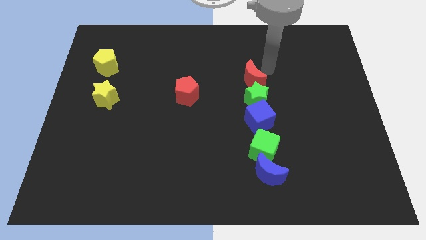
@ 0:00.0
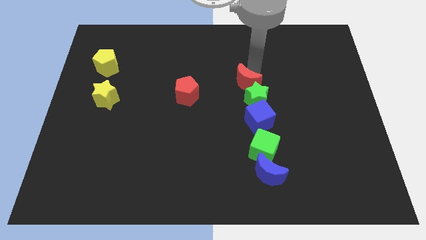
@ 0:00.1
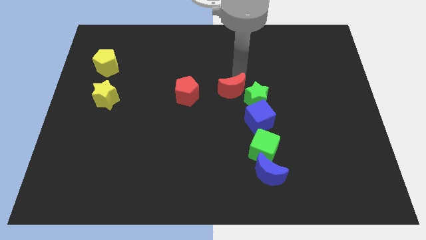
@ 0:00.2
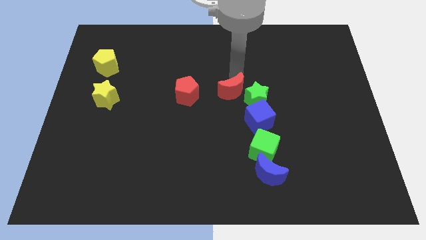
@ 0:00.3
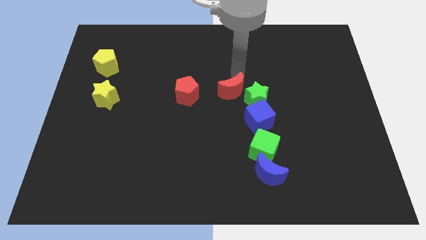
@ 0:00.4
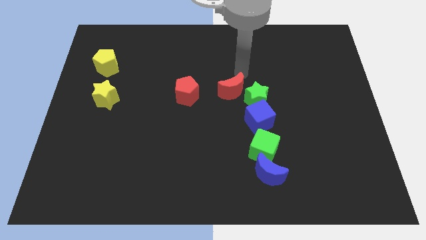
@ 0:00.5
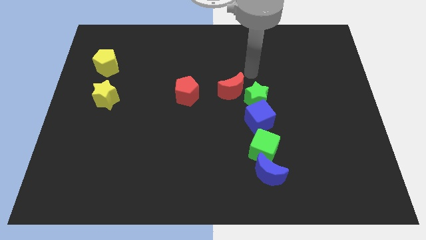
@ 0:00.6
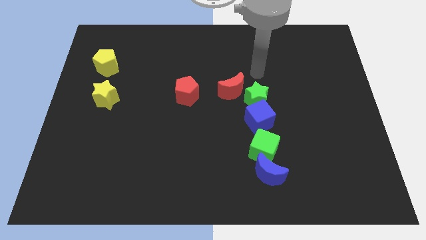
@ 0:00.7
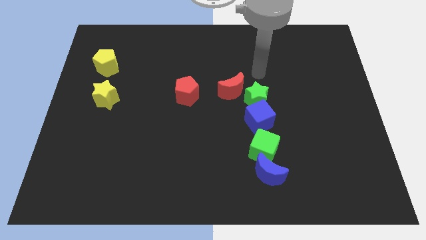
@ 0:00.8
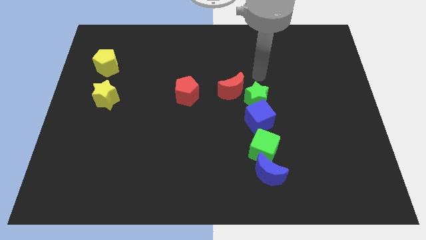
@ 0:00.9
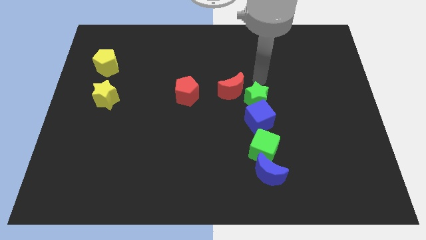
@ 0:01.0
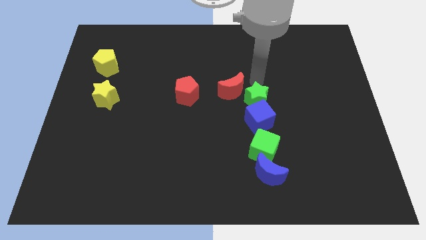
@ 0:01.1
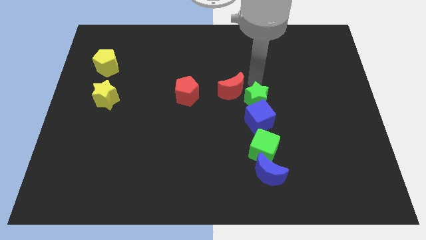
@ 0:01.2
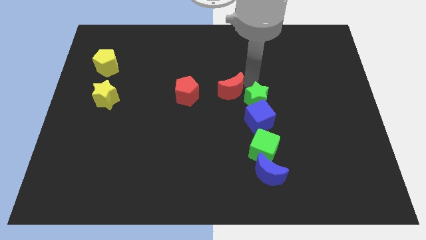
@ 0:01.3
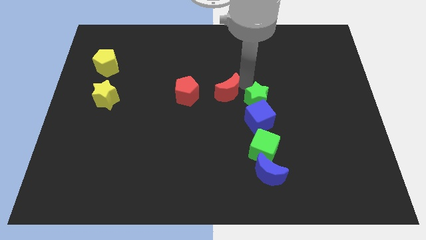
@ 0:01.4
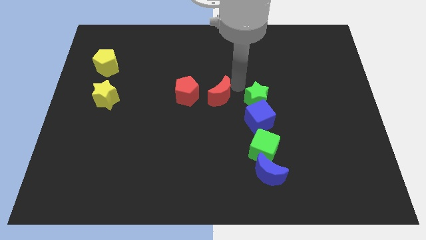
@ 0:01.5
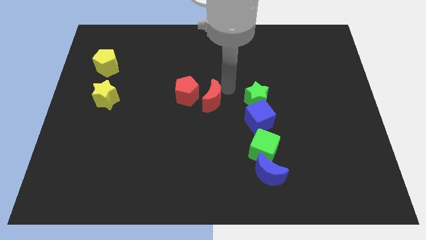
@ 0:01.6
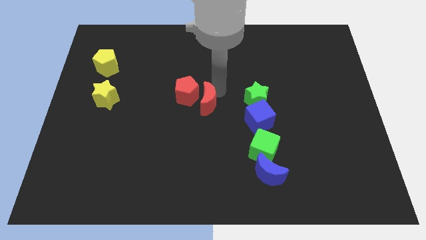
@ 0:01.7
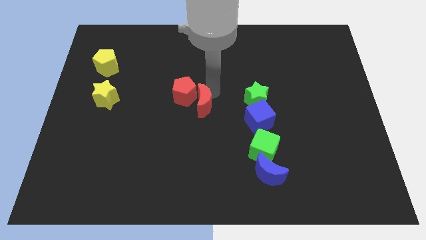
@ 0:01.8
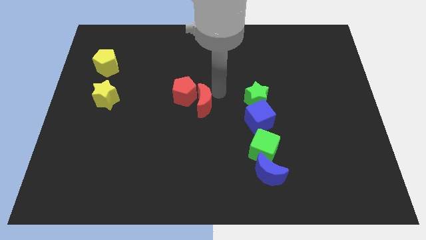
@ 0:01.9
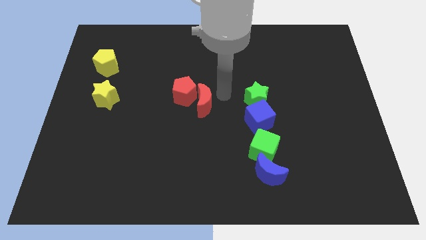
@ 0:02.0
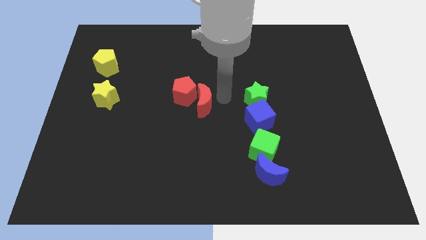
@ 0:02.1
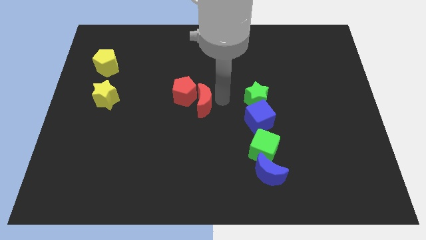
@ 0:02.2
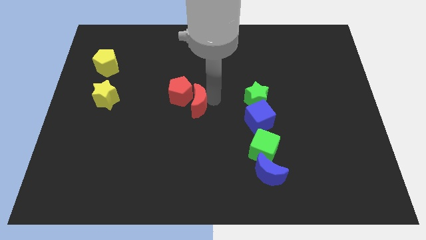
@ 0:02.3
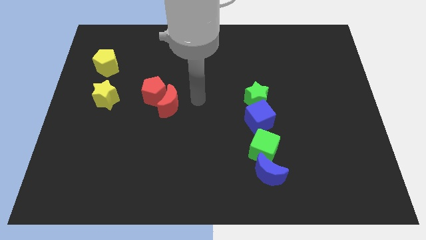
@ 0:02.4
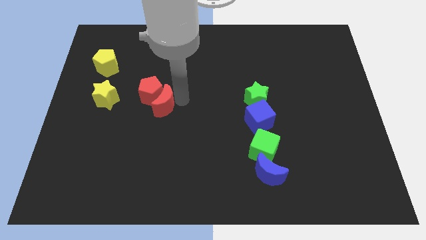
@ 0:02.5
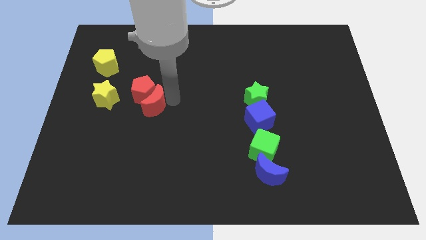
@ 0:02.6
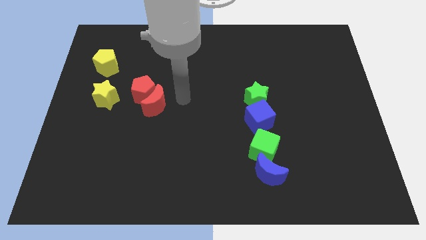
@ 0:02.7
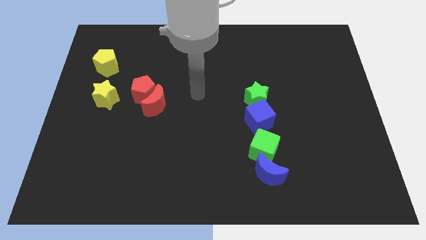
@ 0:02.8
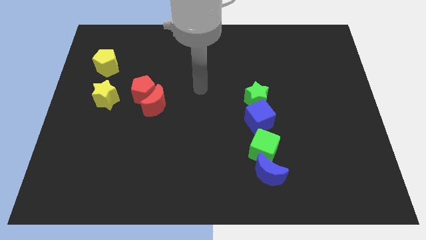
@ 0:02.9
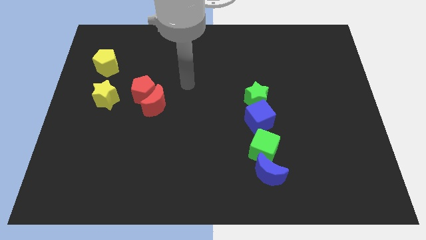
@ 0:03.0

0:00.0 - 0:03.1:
slide both the red blocks towards the center left

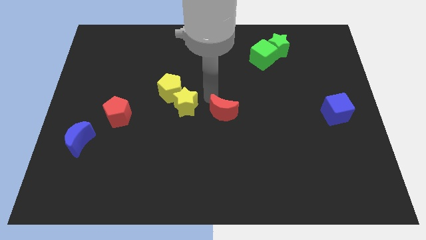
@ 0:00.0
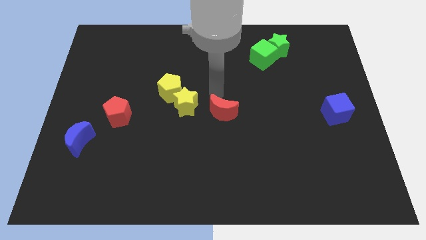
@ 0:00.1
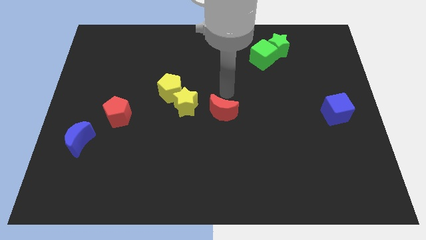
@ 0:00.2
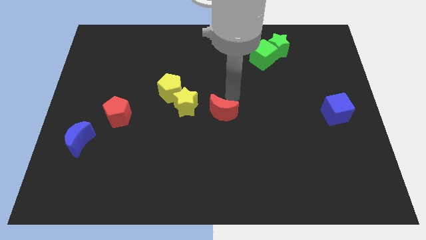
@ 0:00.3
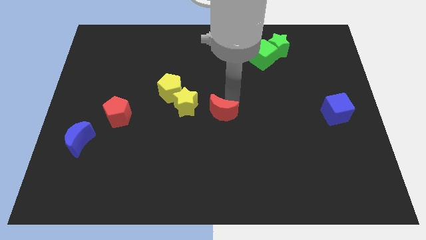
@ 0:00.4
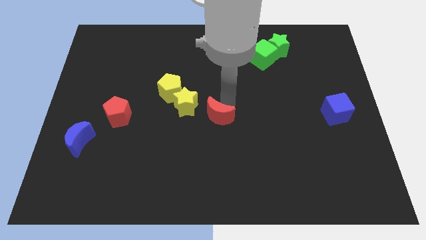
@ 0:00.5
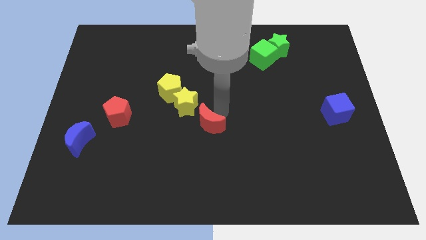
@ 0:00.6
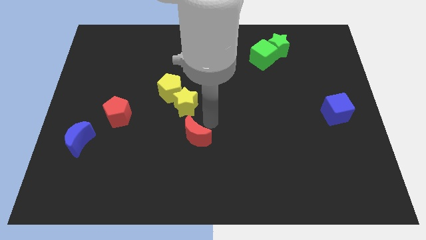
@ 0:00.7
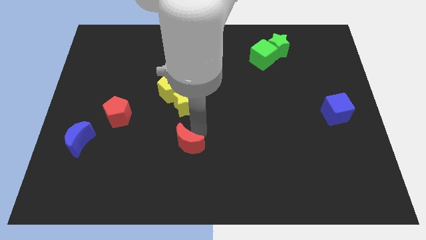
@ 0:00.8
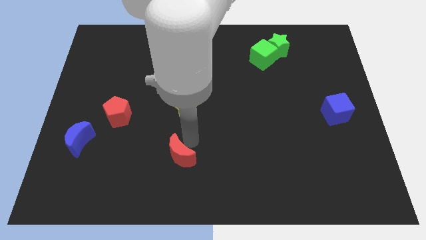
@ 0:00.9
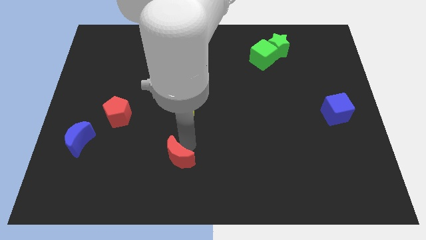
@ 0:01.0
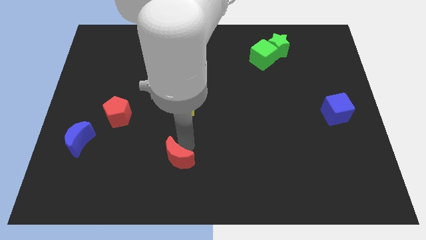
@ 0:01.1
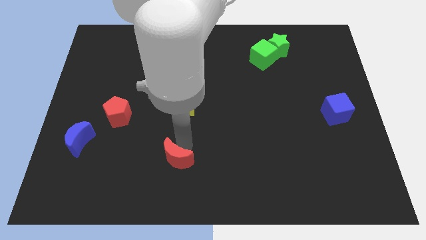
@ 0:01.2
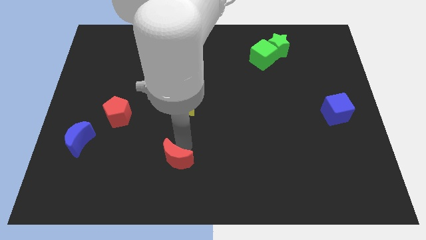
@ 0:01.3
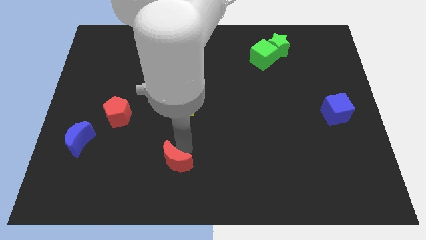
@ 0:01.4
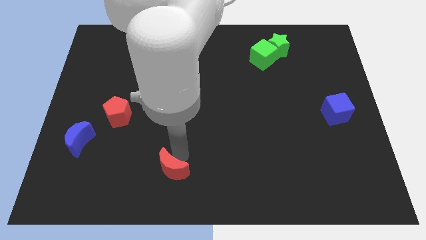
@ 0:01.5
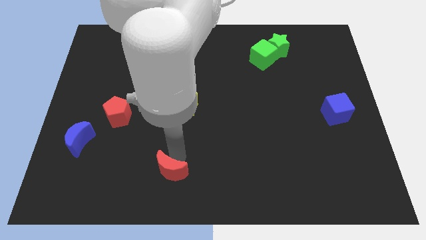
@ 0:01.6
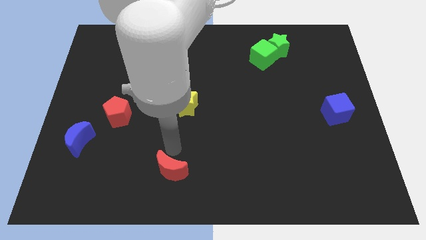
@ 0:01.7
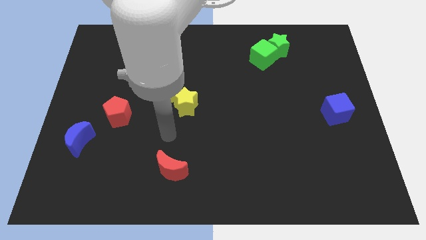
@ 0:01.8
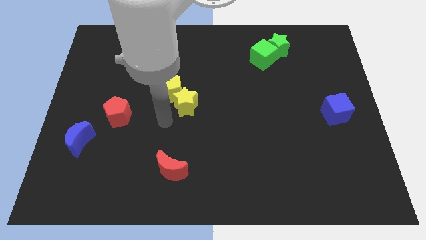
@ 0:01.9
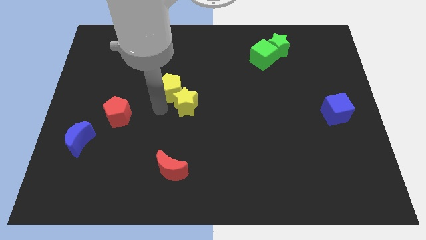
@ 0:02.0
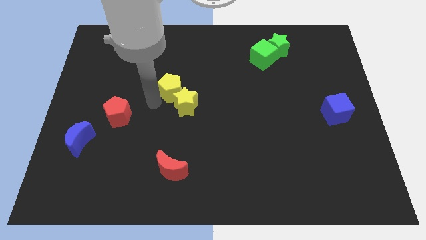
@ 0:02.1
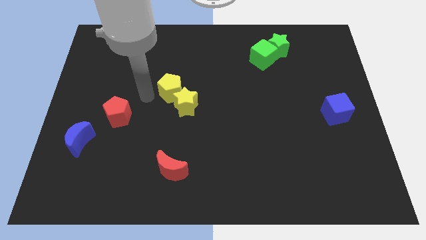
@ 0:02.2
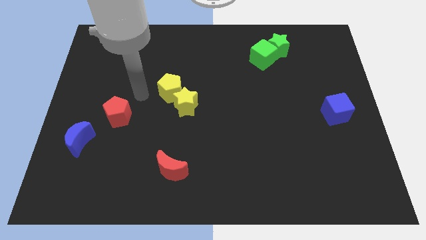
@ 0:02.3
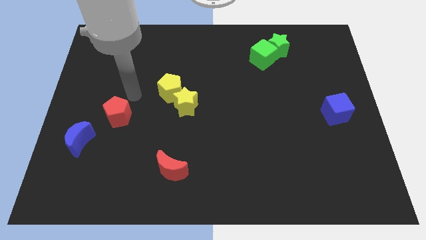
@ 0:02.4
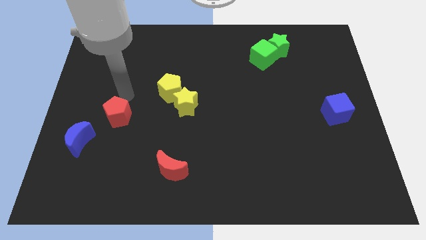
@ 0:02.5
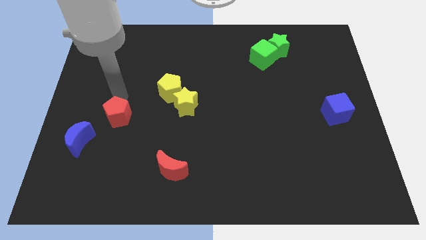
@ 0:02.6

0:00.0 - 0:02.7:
place the red moon below the yellow star

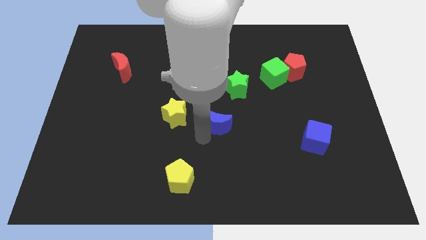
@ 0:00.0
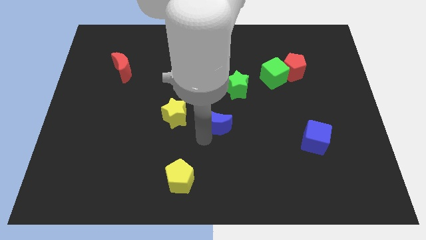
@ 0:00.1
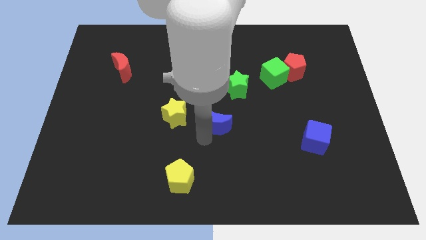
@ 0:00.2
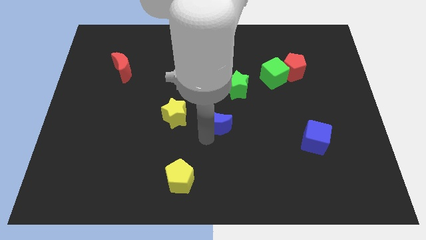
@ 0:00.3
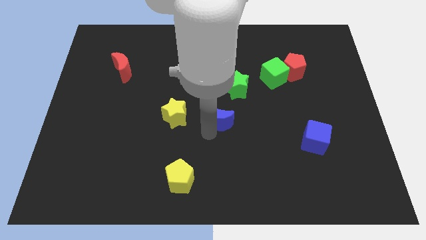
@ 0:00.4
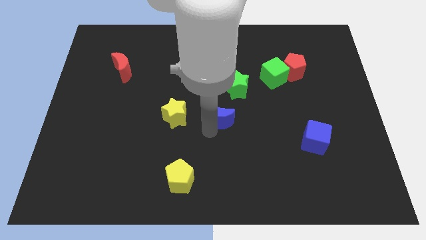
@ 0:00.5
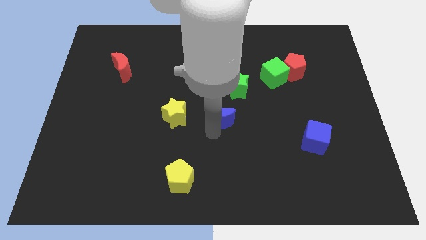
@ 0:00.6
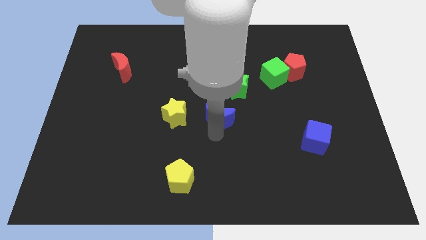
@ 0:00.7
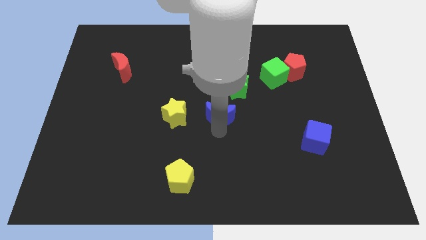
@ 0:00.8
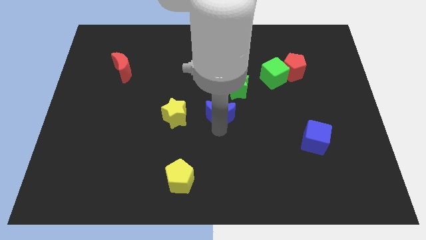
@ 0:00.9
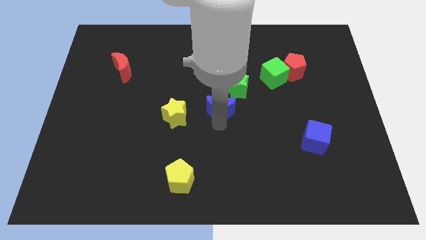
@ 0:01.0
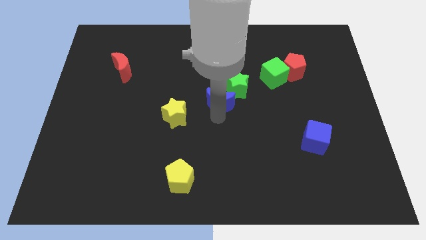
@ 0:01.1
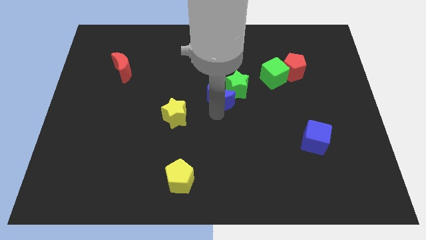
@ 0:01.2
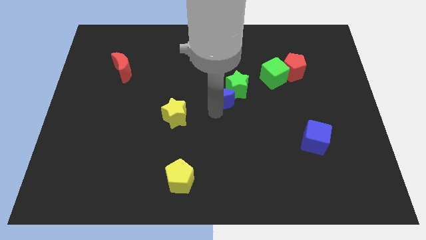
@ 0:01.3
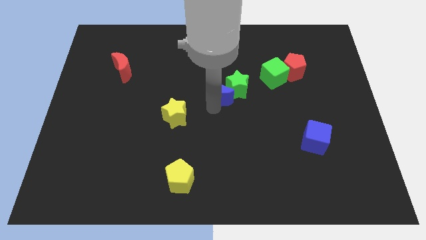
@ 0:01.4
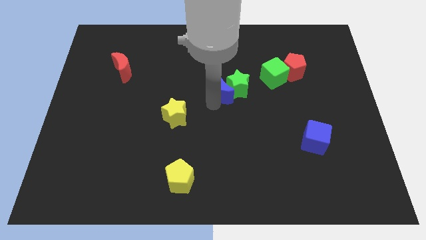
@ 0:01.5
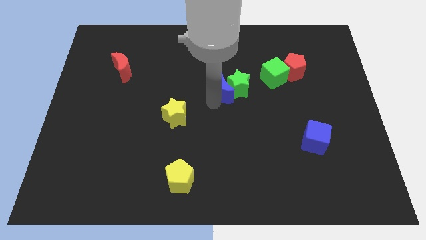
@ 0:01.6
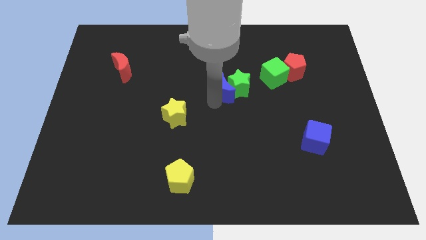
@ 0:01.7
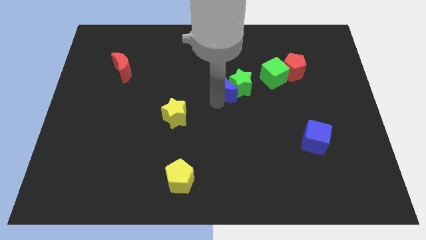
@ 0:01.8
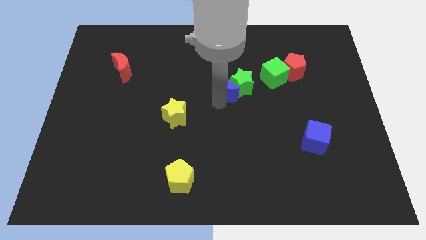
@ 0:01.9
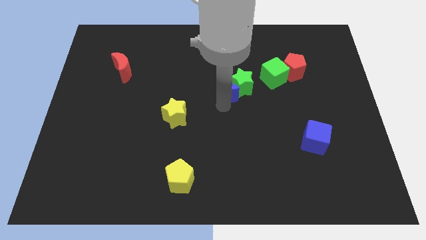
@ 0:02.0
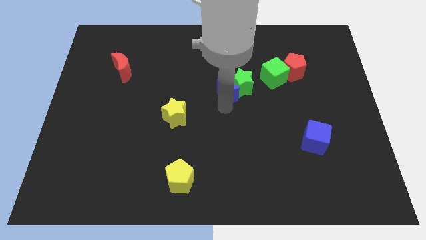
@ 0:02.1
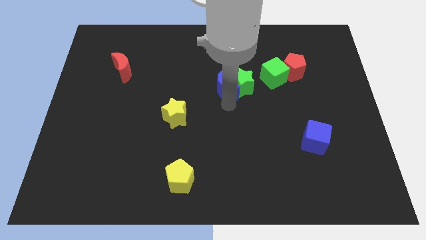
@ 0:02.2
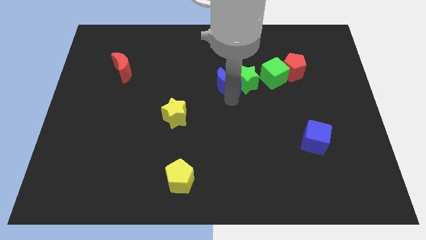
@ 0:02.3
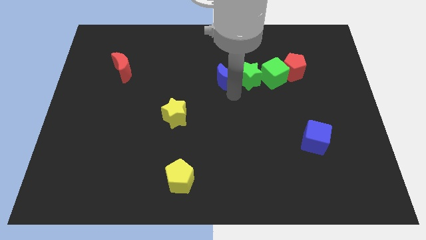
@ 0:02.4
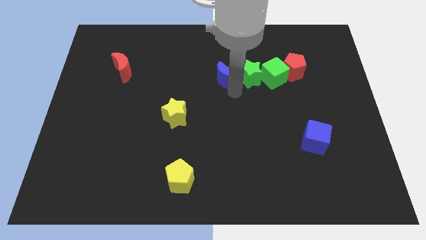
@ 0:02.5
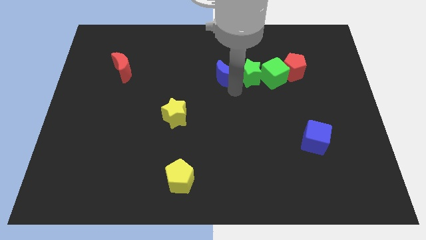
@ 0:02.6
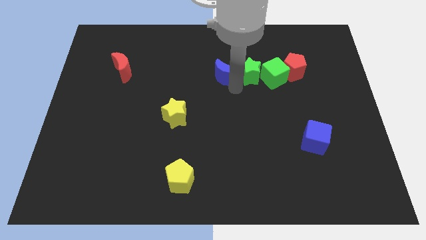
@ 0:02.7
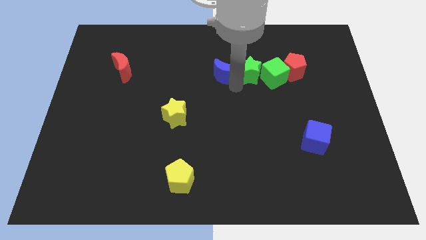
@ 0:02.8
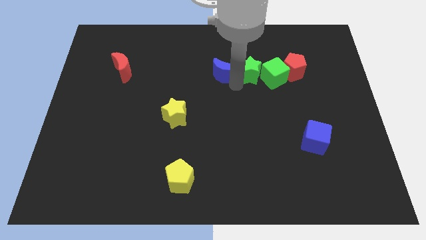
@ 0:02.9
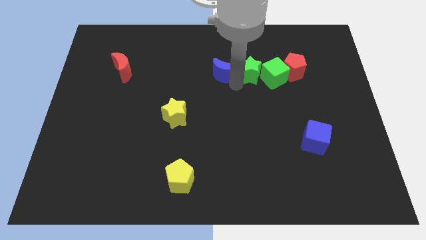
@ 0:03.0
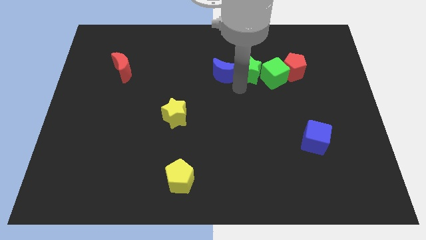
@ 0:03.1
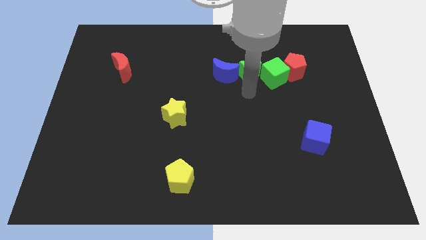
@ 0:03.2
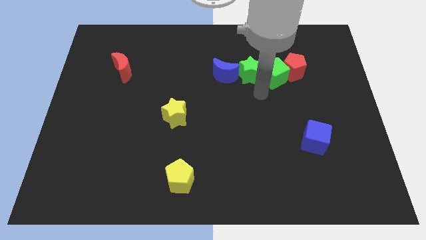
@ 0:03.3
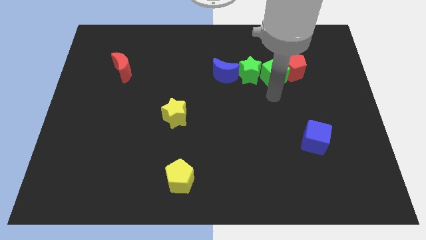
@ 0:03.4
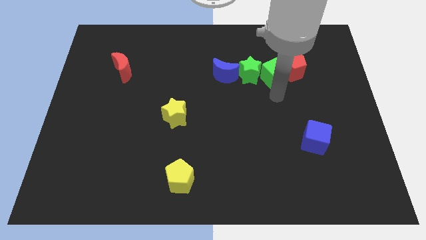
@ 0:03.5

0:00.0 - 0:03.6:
move blue crescent left to green star
